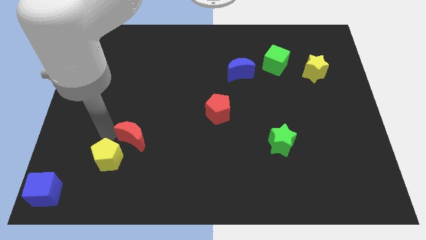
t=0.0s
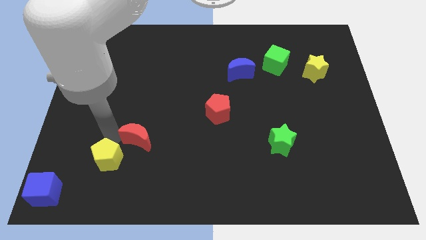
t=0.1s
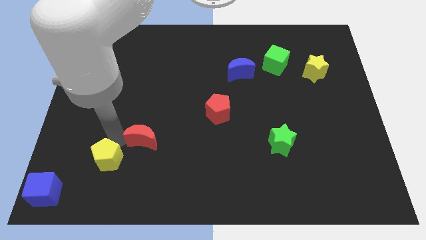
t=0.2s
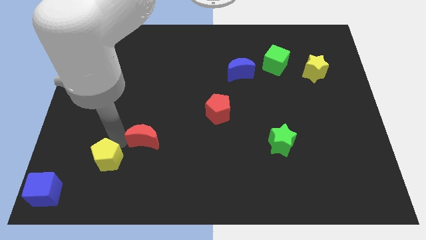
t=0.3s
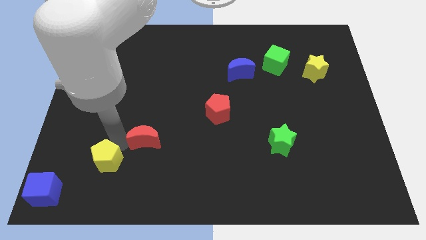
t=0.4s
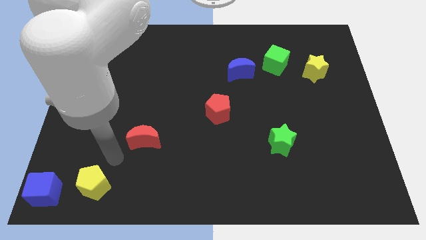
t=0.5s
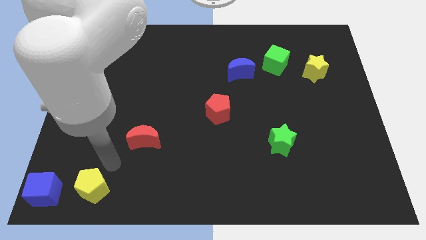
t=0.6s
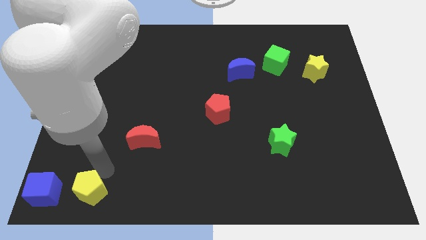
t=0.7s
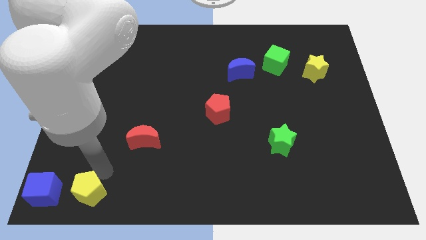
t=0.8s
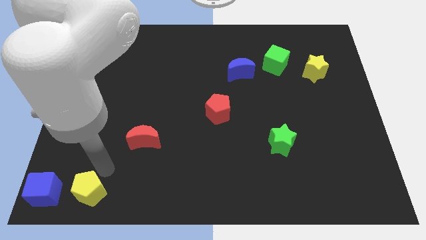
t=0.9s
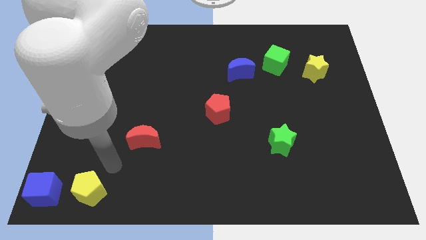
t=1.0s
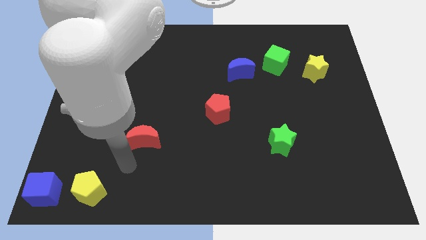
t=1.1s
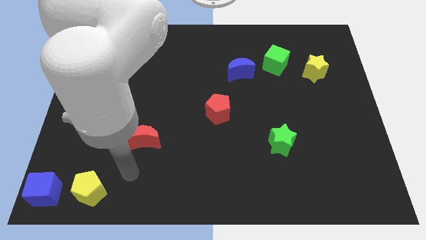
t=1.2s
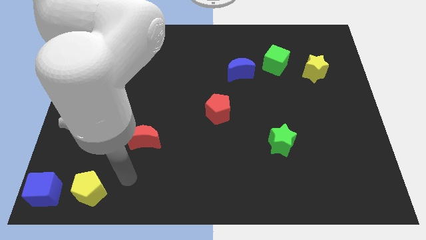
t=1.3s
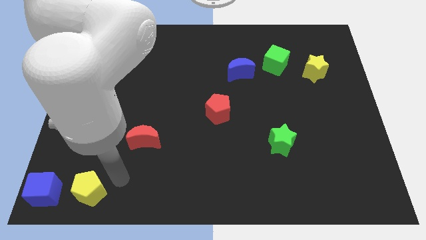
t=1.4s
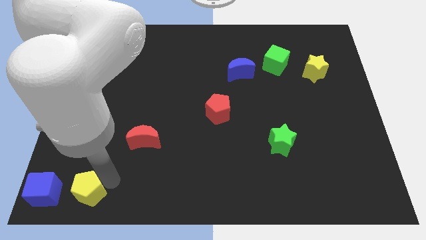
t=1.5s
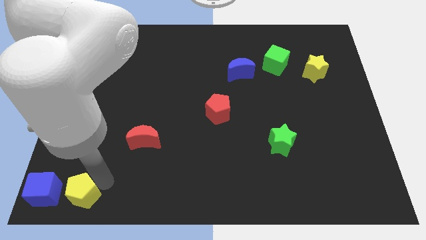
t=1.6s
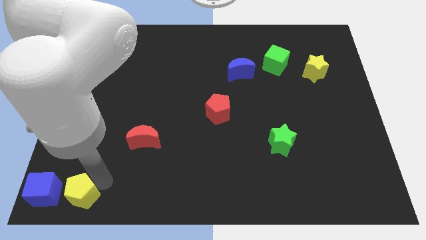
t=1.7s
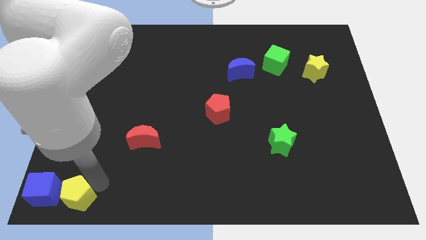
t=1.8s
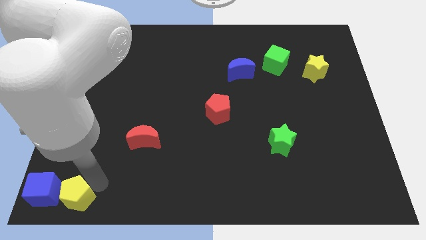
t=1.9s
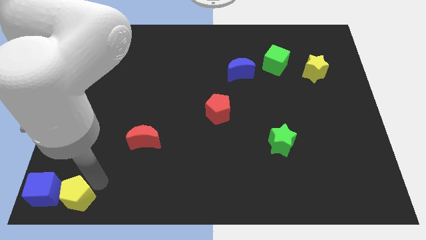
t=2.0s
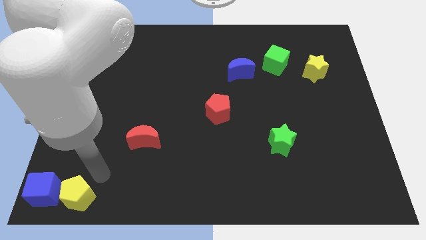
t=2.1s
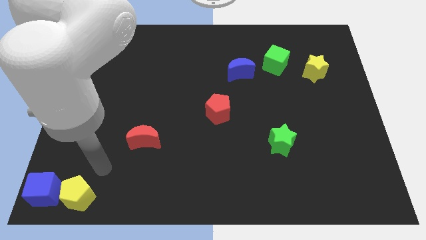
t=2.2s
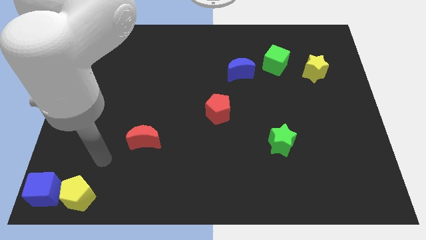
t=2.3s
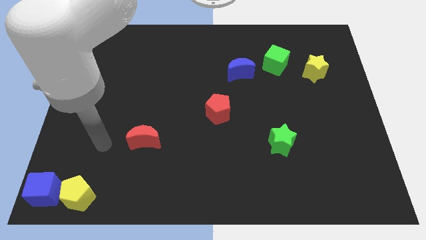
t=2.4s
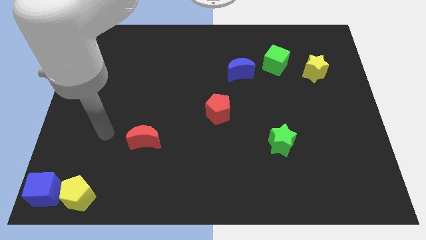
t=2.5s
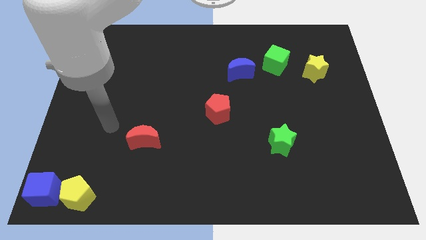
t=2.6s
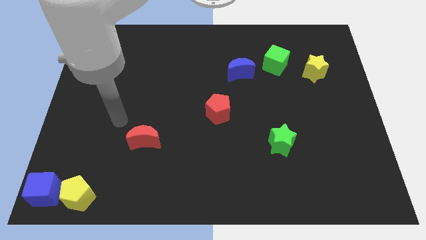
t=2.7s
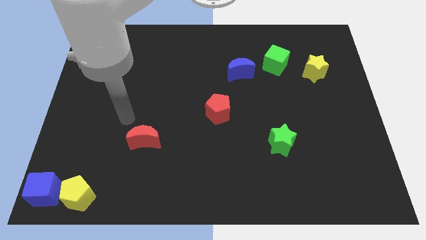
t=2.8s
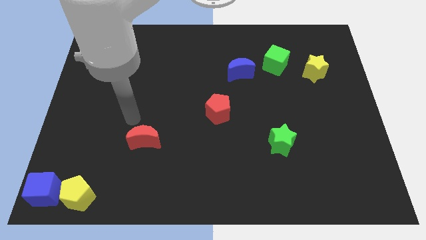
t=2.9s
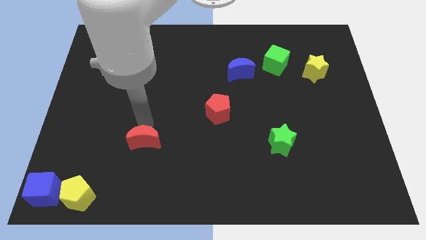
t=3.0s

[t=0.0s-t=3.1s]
move yellow pentagon right beside the blue cube

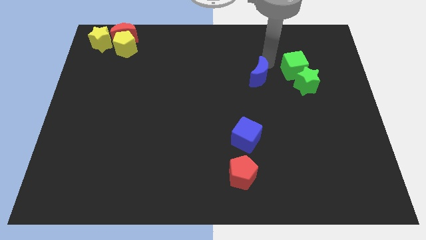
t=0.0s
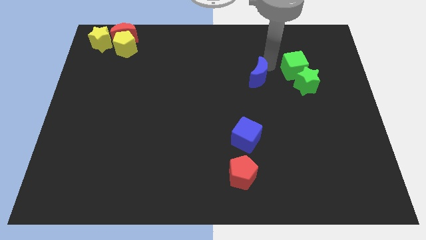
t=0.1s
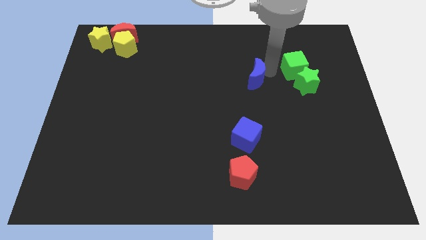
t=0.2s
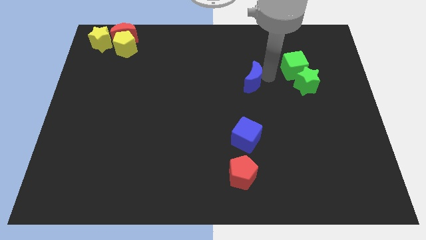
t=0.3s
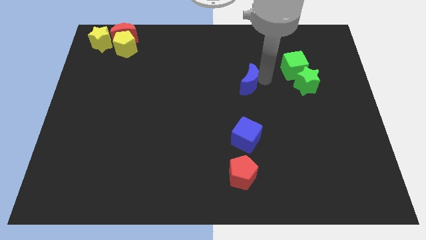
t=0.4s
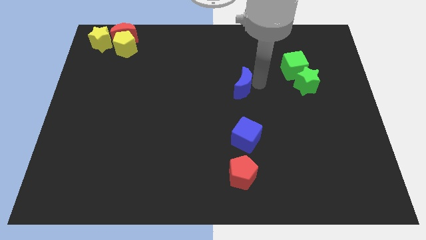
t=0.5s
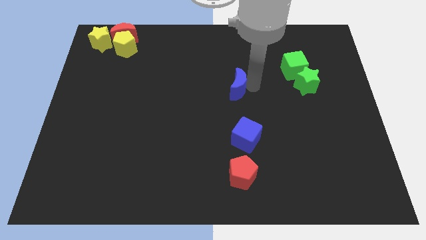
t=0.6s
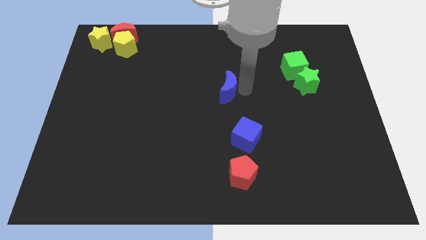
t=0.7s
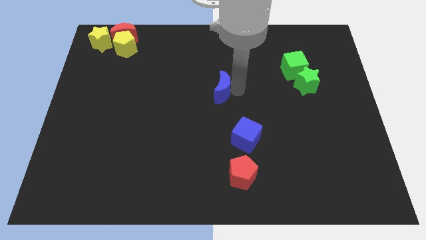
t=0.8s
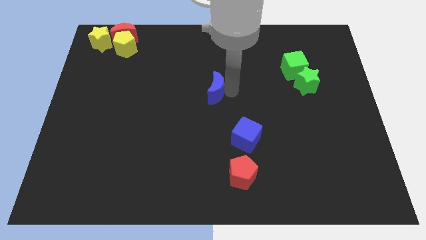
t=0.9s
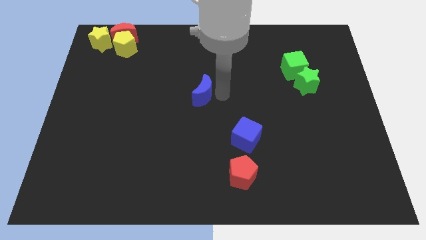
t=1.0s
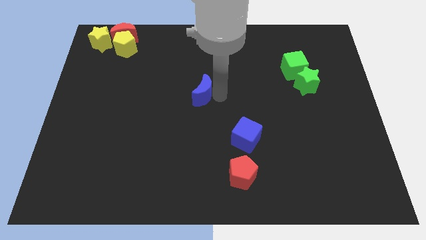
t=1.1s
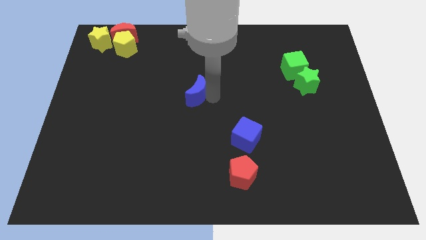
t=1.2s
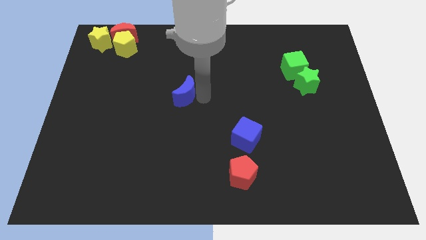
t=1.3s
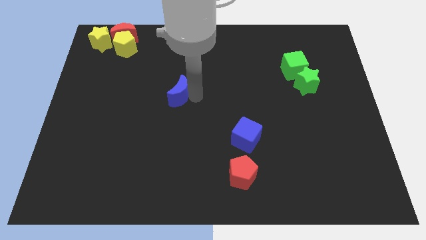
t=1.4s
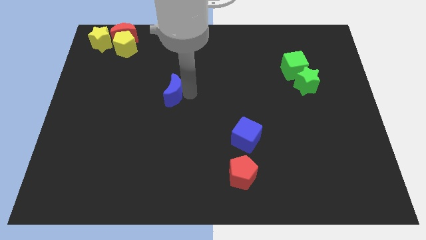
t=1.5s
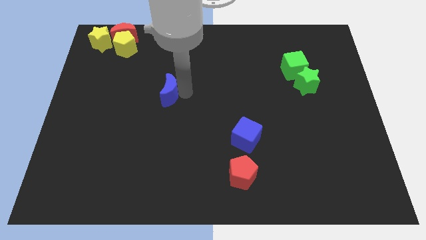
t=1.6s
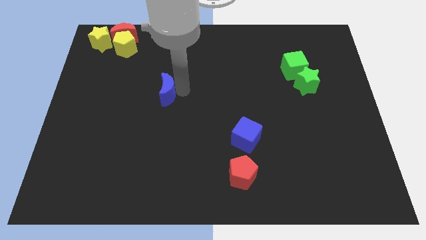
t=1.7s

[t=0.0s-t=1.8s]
move red moon to the center of the board

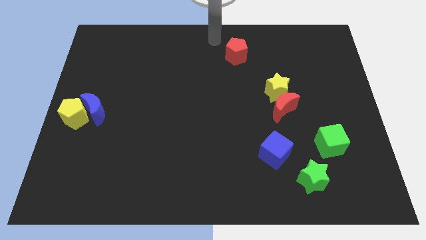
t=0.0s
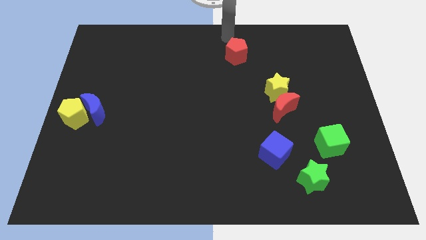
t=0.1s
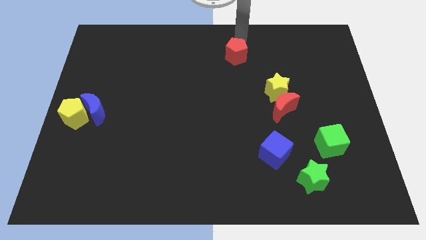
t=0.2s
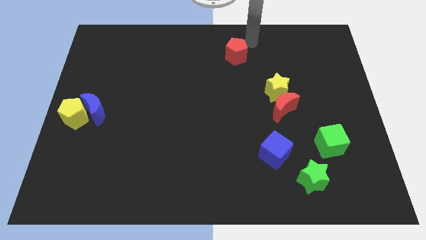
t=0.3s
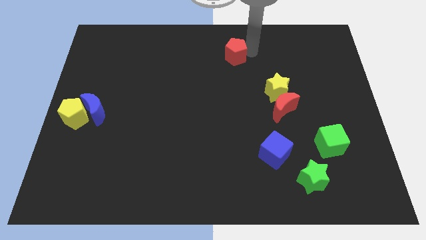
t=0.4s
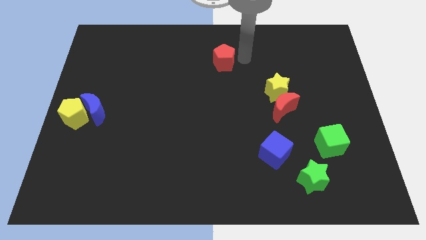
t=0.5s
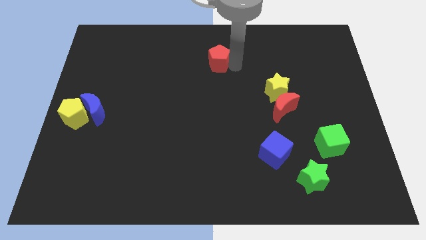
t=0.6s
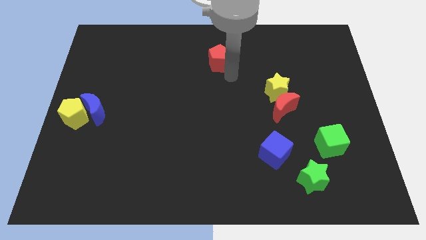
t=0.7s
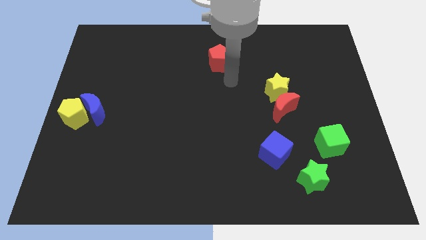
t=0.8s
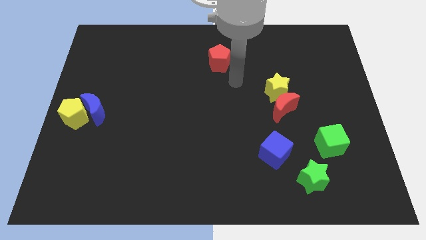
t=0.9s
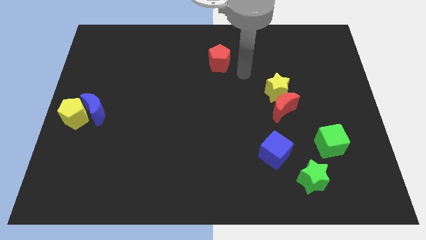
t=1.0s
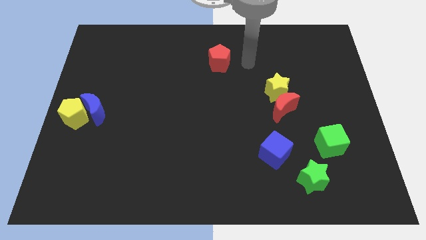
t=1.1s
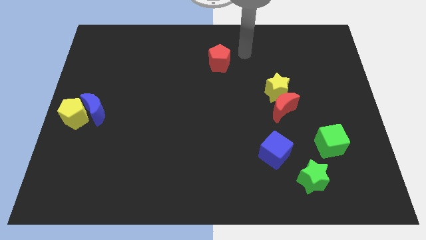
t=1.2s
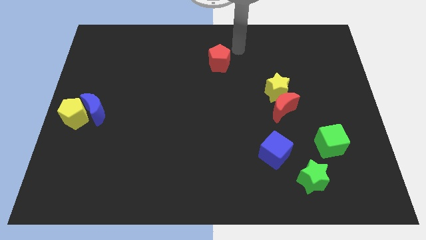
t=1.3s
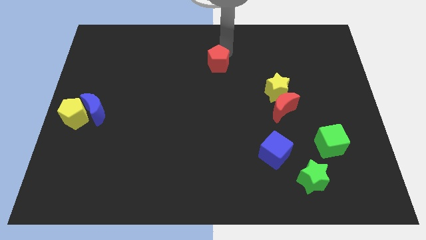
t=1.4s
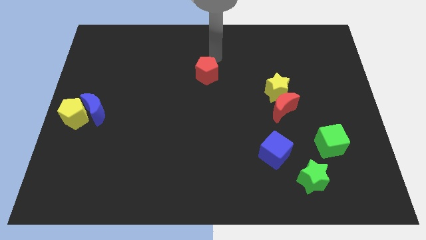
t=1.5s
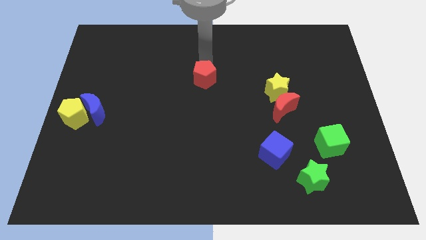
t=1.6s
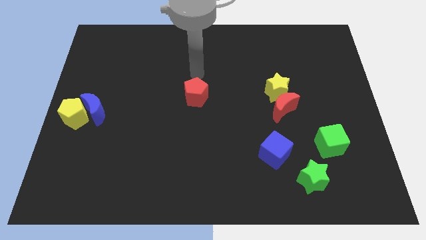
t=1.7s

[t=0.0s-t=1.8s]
push the red pentagon towards the center of the board

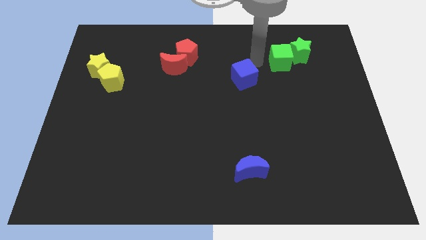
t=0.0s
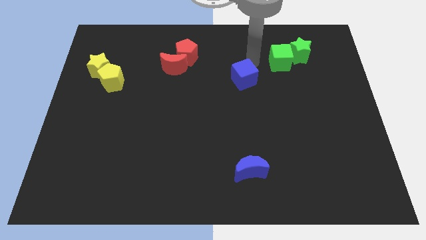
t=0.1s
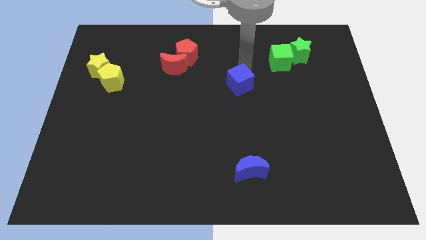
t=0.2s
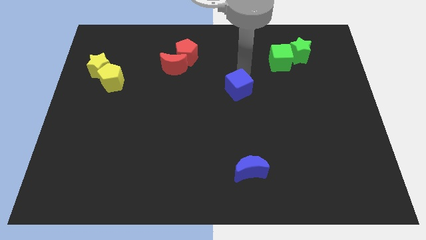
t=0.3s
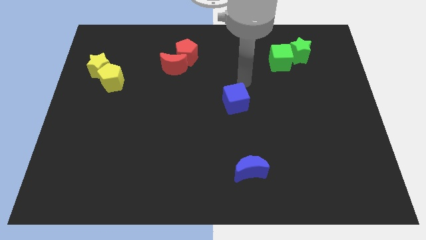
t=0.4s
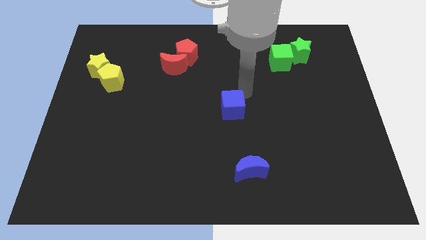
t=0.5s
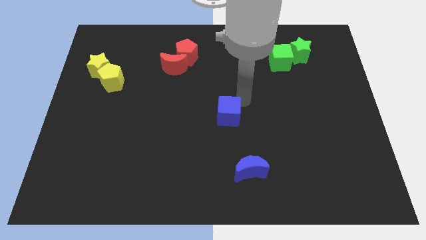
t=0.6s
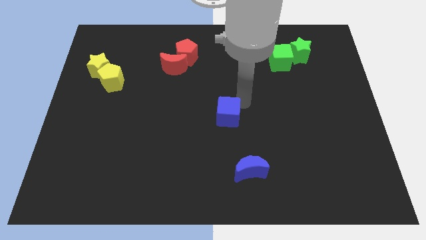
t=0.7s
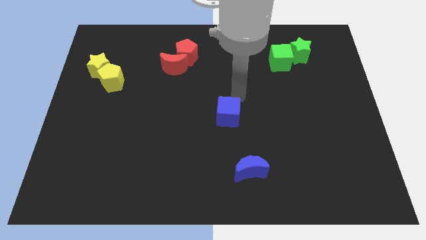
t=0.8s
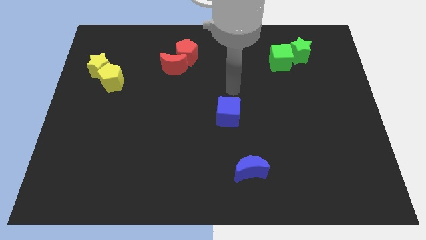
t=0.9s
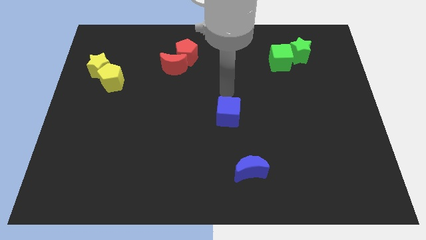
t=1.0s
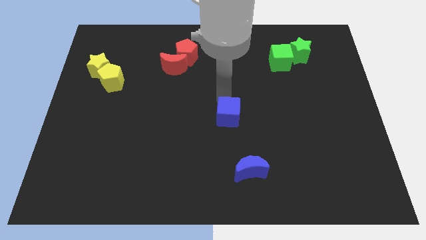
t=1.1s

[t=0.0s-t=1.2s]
push the blue cube towards the center of the board

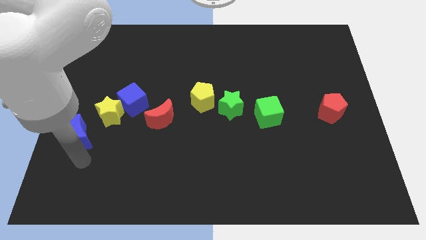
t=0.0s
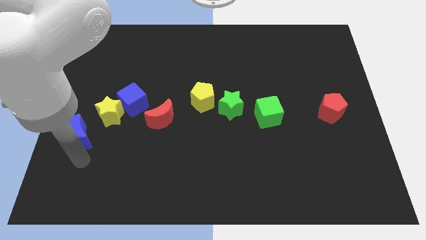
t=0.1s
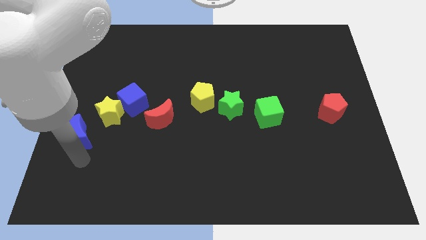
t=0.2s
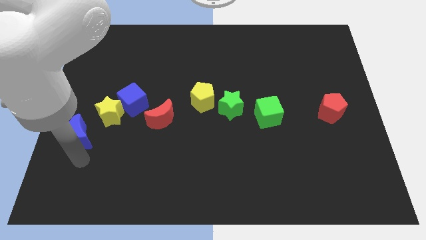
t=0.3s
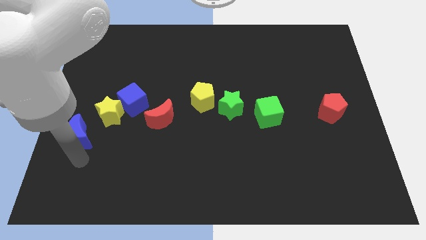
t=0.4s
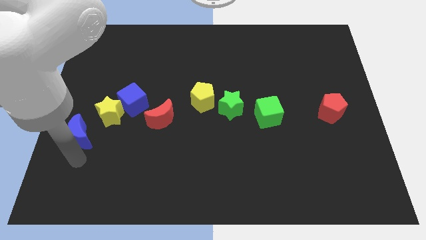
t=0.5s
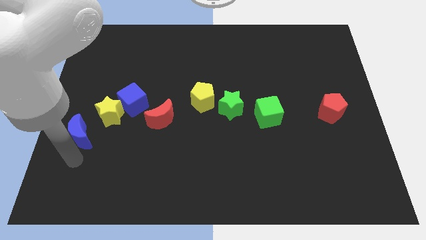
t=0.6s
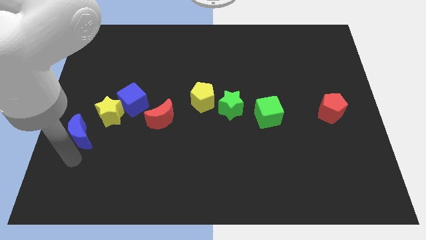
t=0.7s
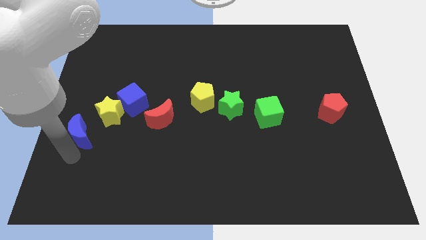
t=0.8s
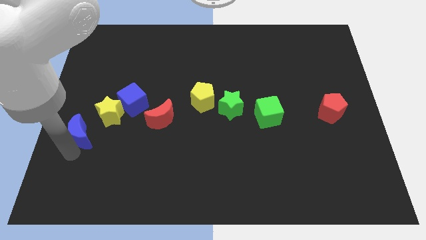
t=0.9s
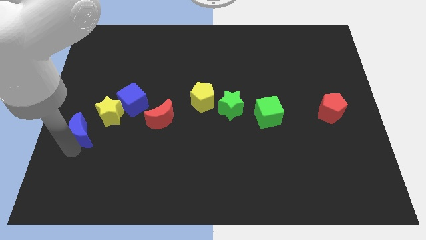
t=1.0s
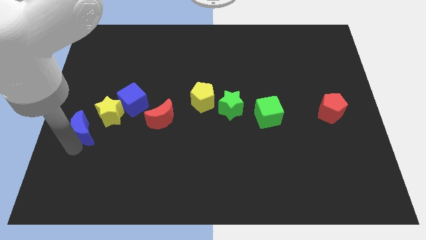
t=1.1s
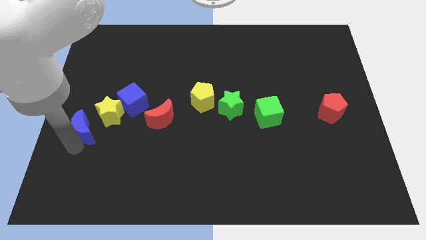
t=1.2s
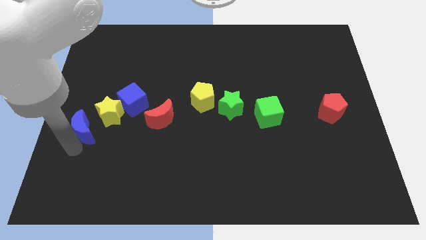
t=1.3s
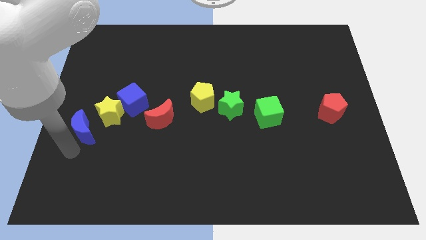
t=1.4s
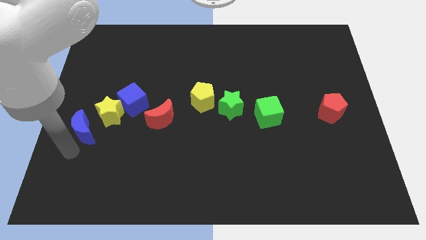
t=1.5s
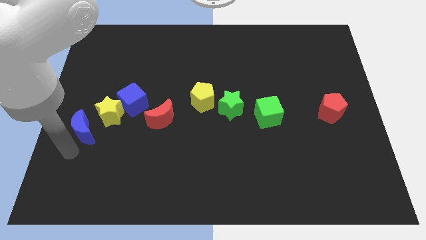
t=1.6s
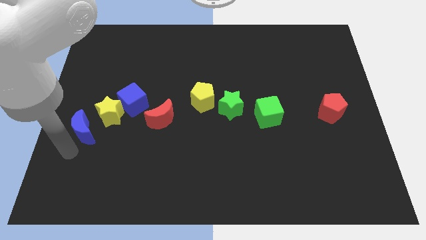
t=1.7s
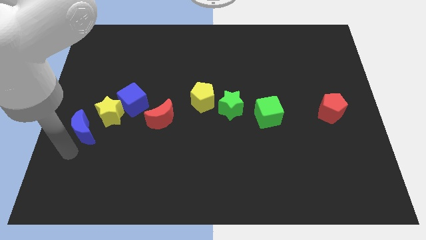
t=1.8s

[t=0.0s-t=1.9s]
slide the blue moon towards the yellow star
